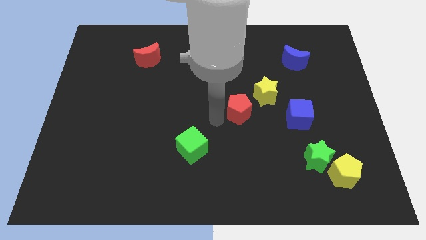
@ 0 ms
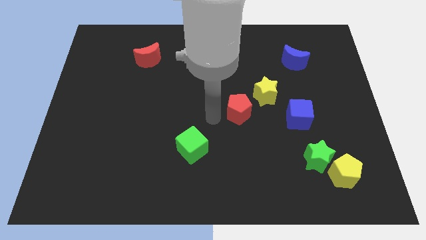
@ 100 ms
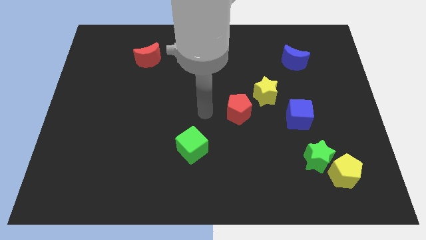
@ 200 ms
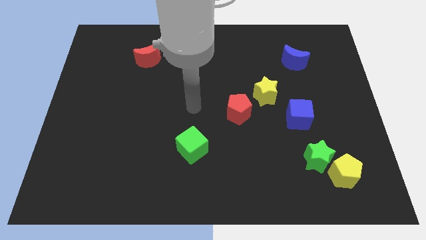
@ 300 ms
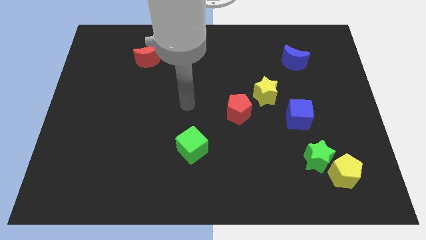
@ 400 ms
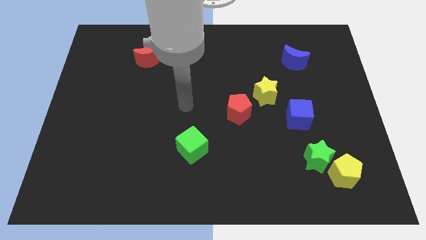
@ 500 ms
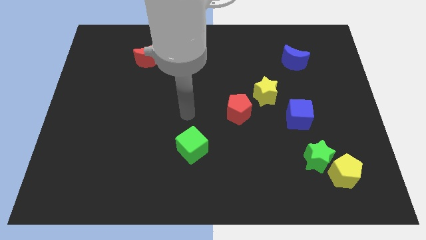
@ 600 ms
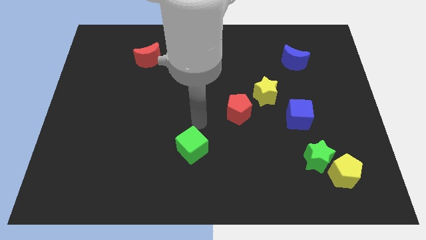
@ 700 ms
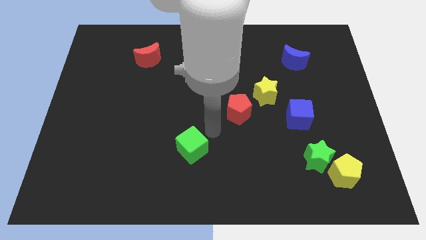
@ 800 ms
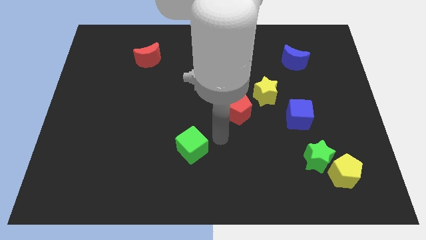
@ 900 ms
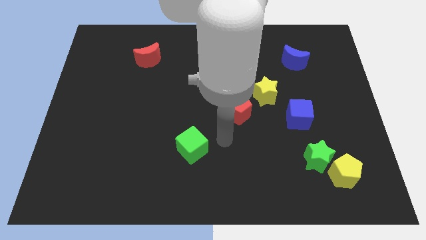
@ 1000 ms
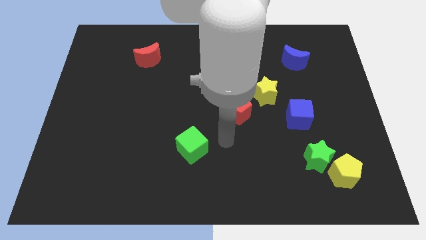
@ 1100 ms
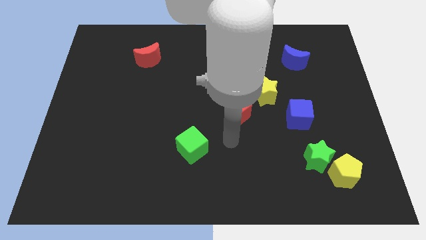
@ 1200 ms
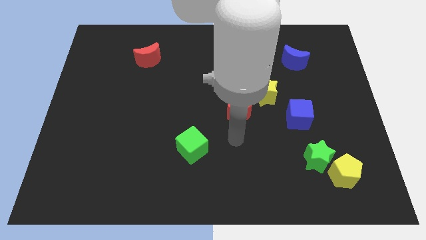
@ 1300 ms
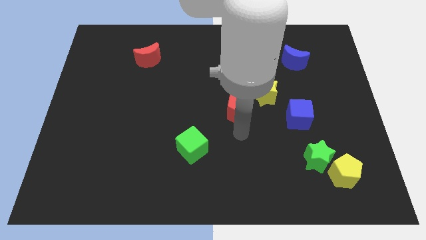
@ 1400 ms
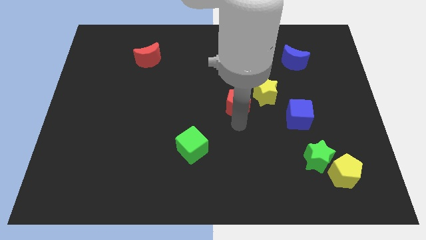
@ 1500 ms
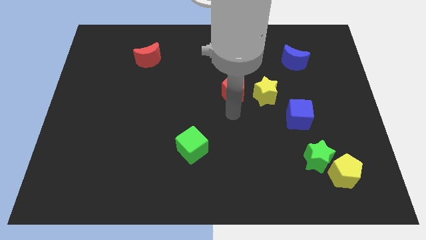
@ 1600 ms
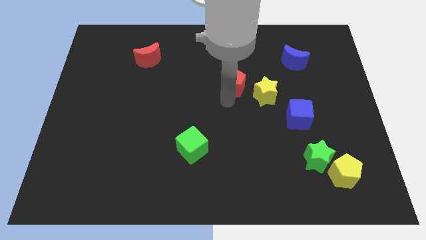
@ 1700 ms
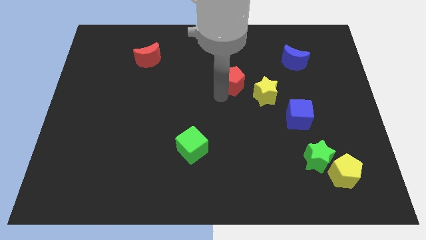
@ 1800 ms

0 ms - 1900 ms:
push the red pentagon to the center of the board

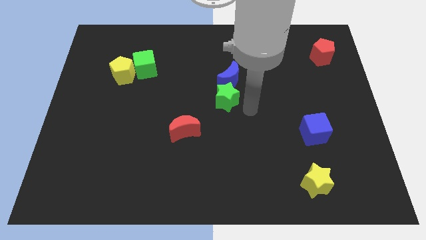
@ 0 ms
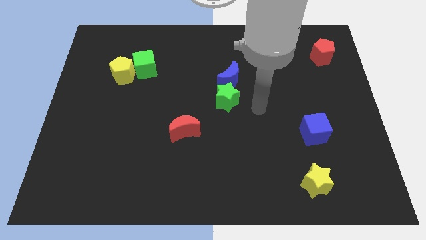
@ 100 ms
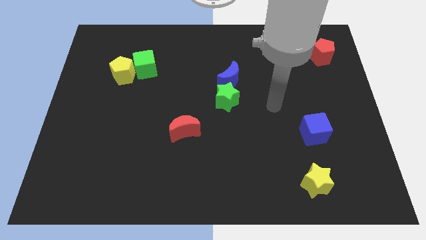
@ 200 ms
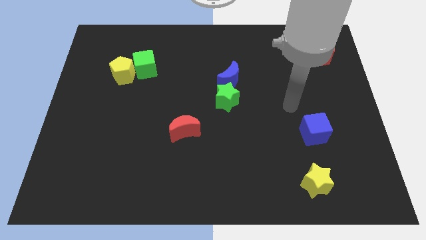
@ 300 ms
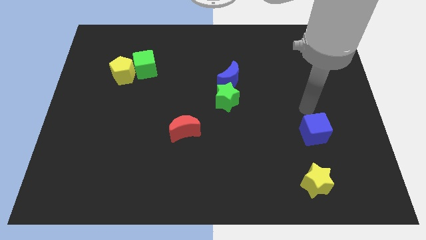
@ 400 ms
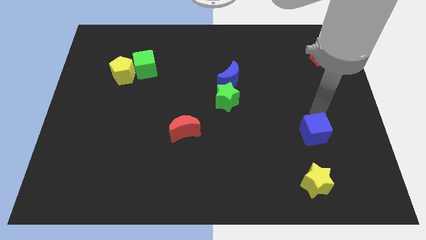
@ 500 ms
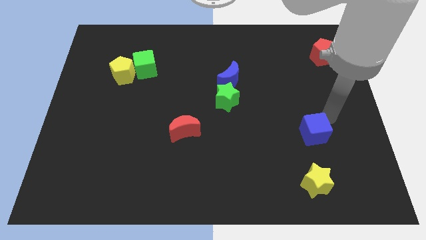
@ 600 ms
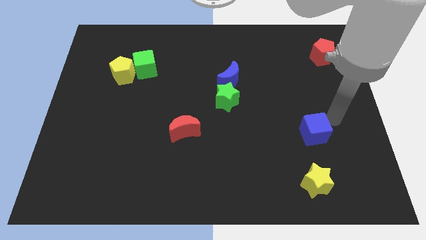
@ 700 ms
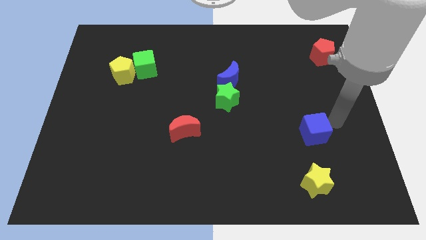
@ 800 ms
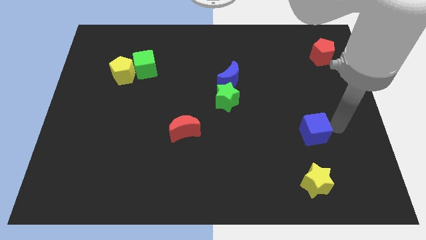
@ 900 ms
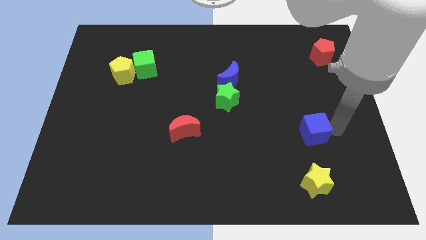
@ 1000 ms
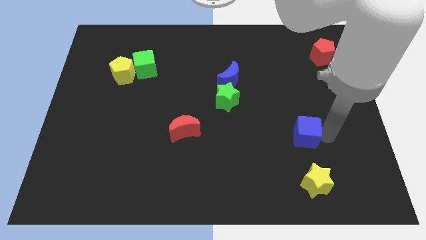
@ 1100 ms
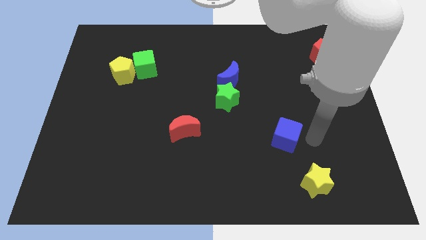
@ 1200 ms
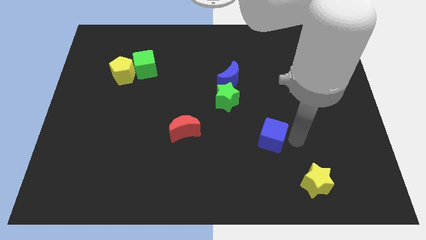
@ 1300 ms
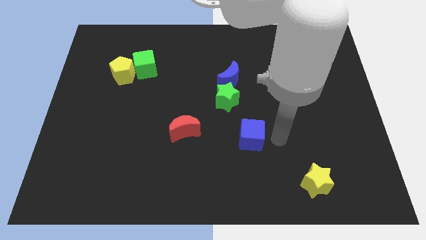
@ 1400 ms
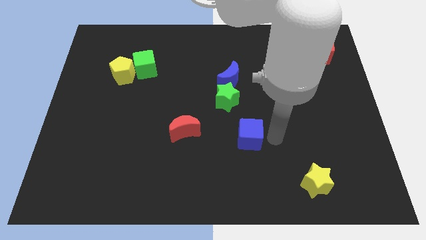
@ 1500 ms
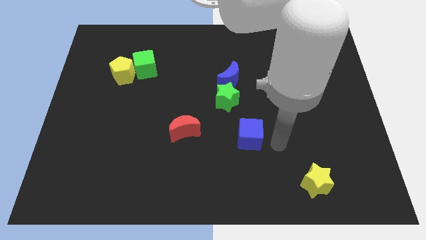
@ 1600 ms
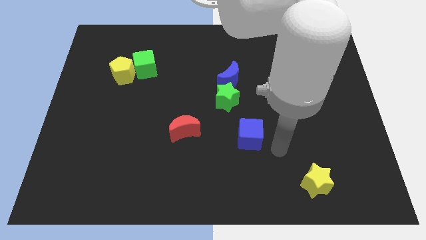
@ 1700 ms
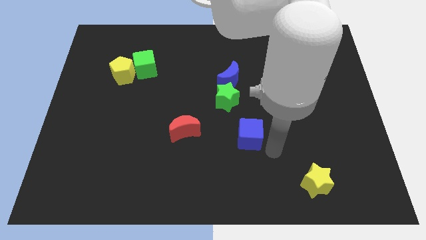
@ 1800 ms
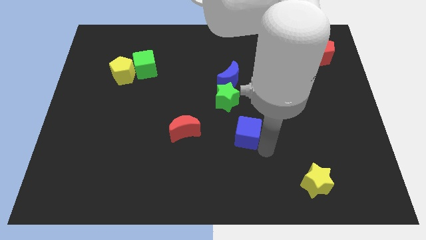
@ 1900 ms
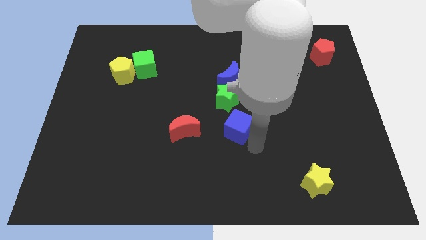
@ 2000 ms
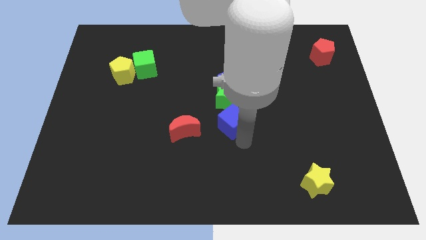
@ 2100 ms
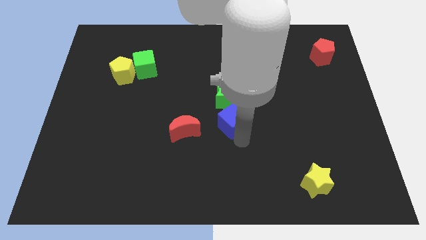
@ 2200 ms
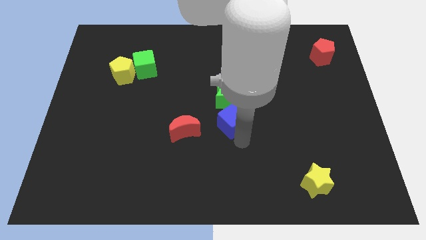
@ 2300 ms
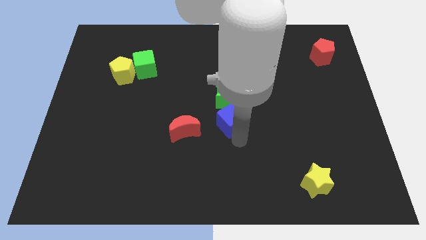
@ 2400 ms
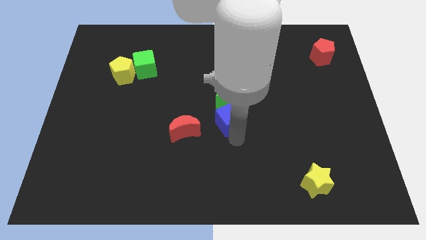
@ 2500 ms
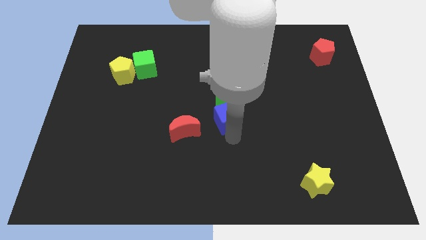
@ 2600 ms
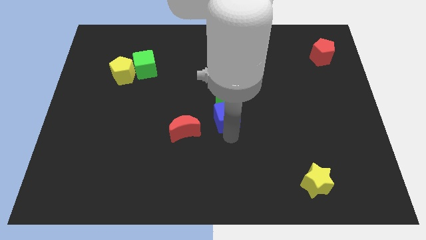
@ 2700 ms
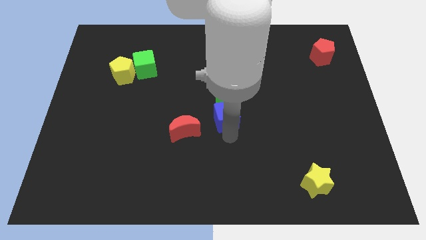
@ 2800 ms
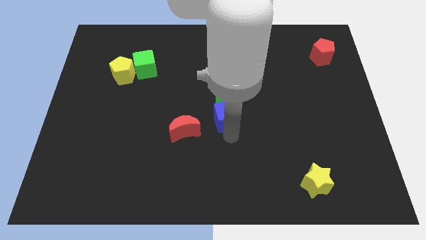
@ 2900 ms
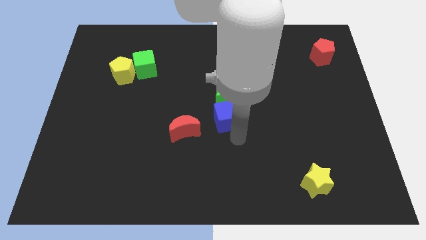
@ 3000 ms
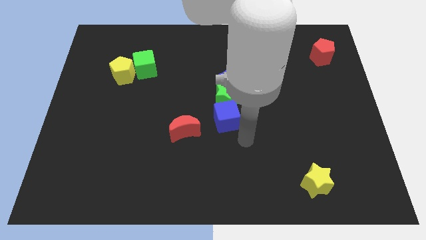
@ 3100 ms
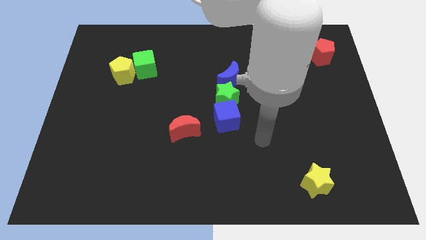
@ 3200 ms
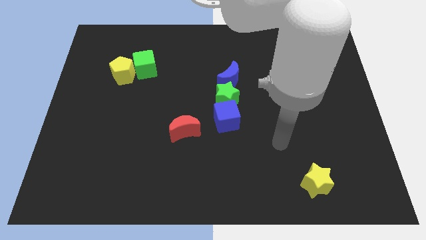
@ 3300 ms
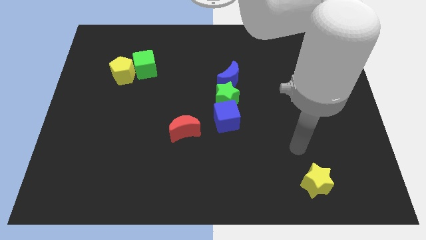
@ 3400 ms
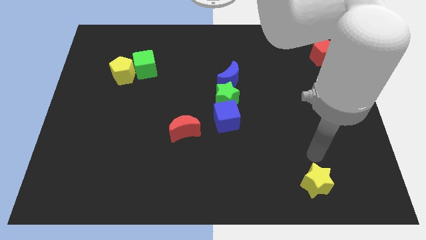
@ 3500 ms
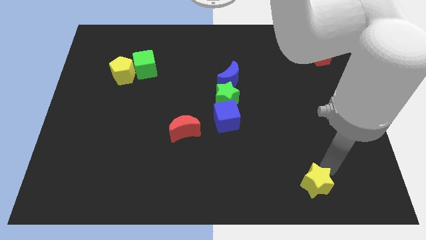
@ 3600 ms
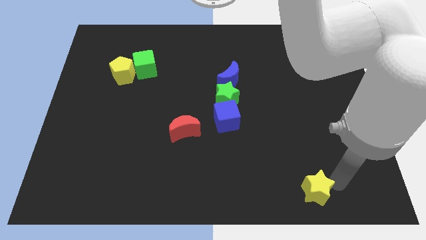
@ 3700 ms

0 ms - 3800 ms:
push the blue cube towards the bottom of the green star

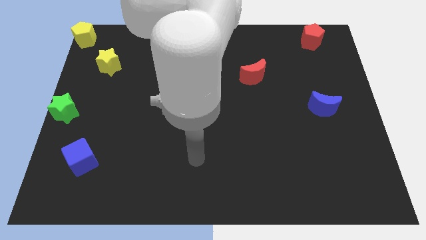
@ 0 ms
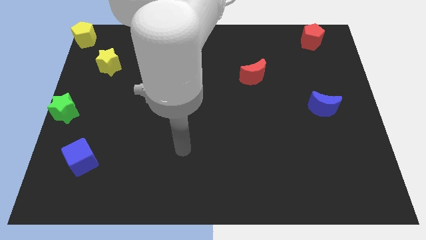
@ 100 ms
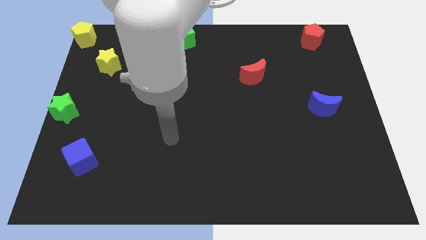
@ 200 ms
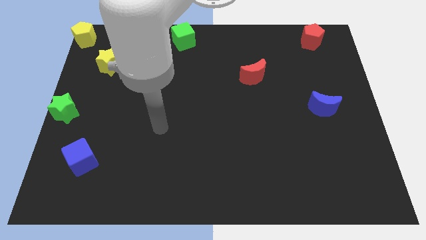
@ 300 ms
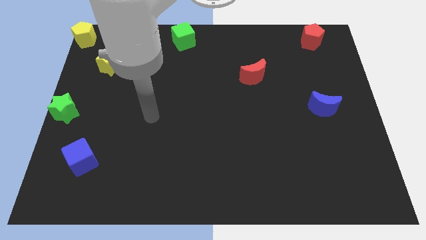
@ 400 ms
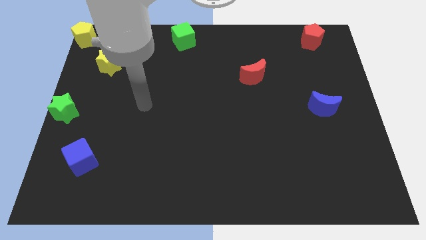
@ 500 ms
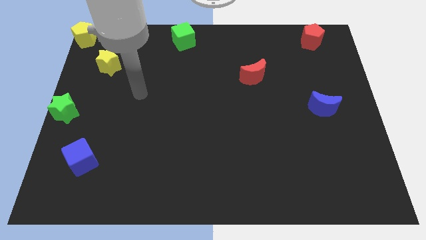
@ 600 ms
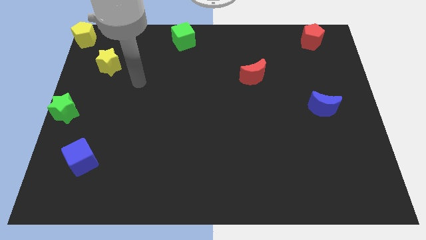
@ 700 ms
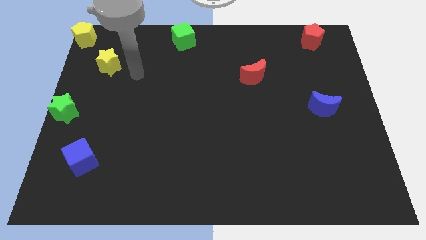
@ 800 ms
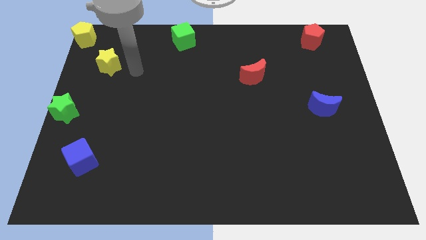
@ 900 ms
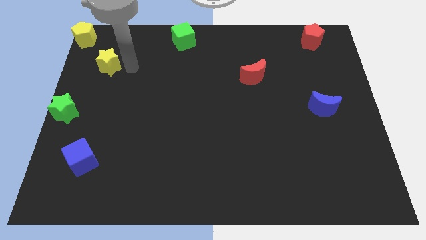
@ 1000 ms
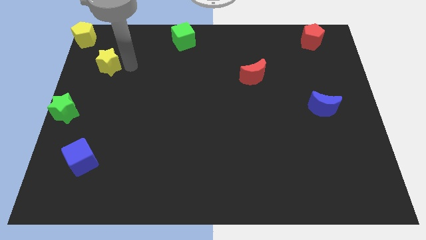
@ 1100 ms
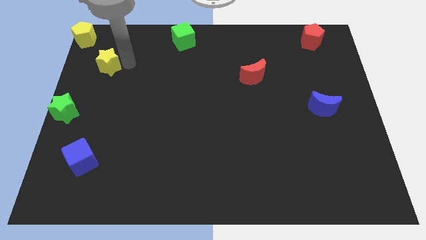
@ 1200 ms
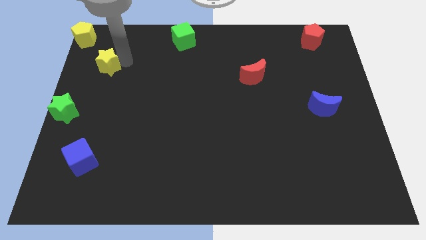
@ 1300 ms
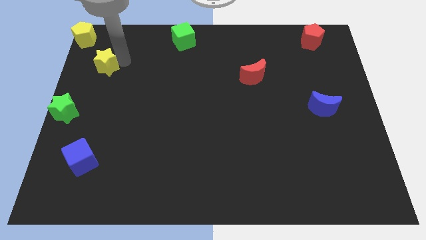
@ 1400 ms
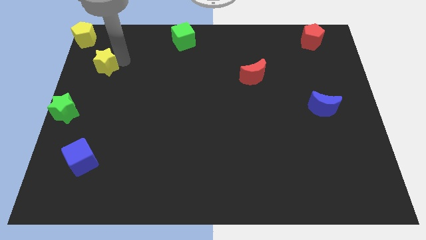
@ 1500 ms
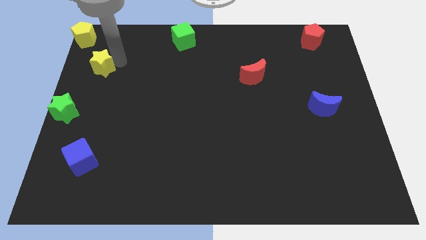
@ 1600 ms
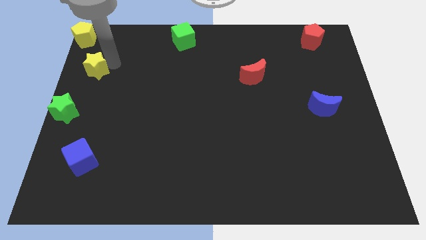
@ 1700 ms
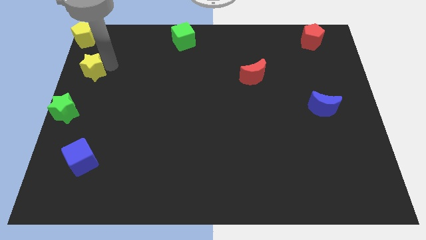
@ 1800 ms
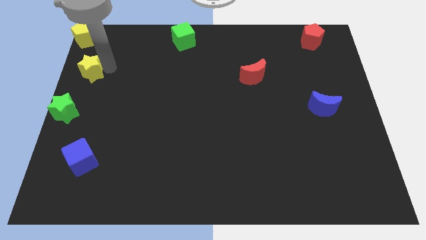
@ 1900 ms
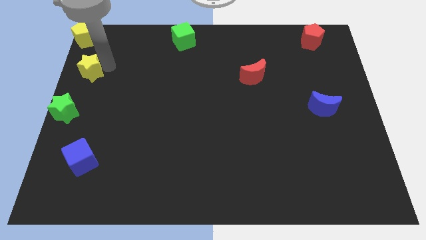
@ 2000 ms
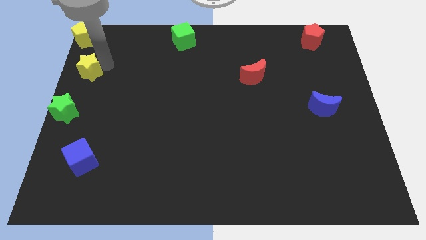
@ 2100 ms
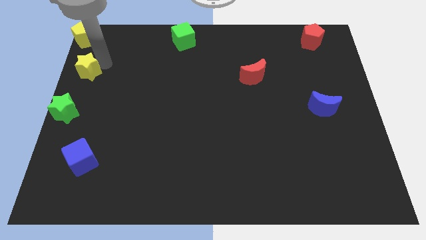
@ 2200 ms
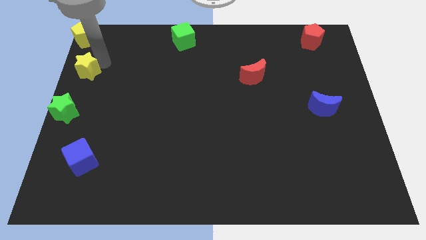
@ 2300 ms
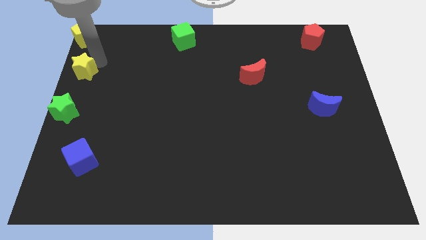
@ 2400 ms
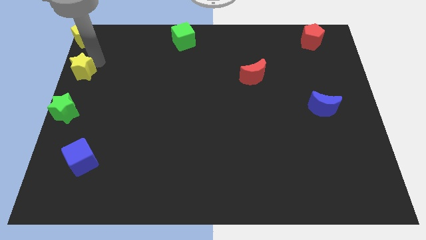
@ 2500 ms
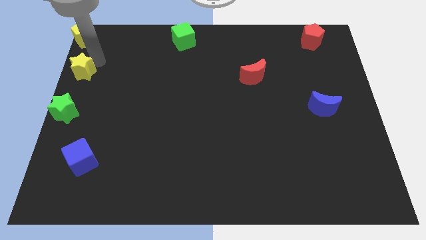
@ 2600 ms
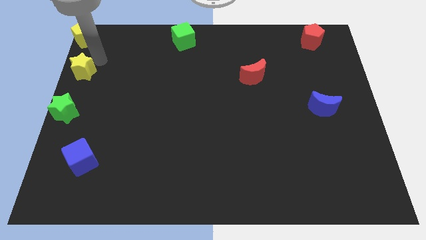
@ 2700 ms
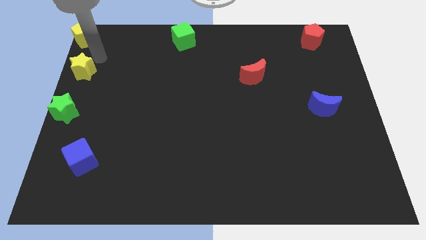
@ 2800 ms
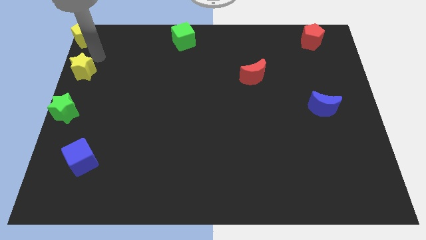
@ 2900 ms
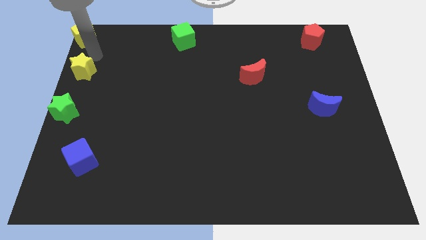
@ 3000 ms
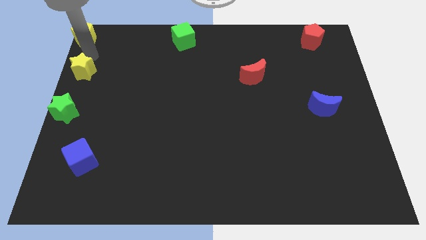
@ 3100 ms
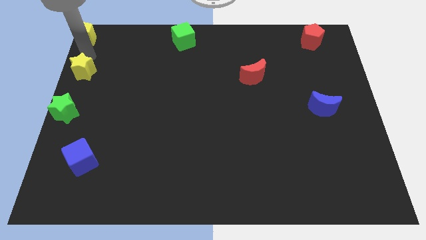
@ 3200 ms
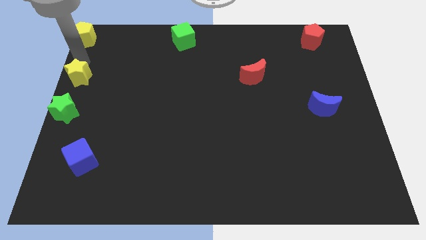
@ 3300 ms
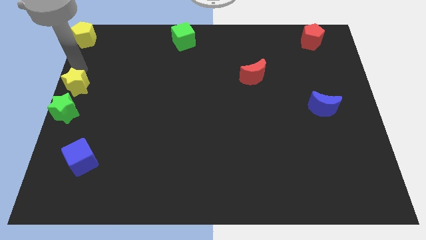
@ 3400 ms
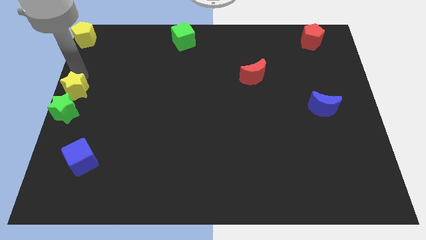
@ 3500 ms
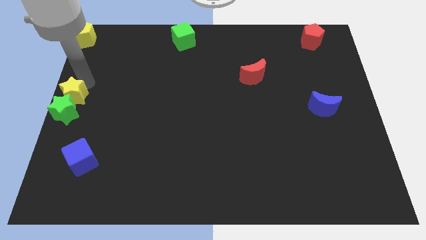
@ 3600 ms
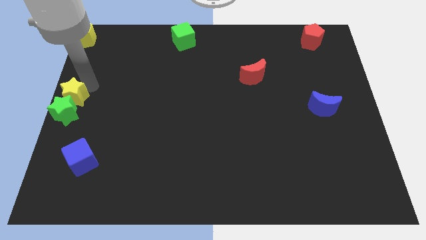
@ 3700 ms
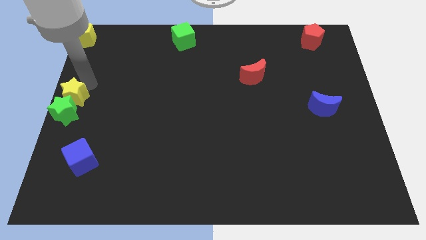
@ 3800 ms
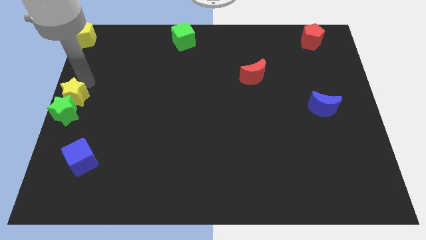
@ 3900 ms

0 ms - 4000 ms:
place the yellow star on top of the green star
